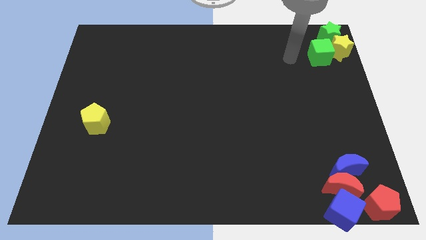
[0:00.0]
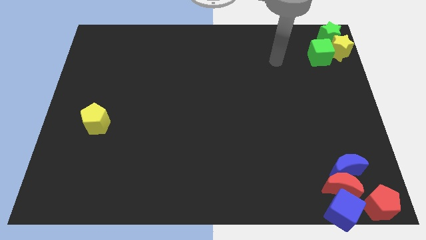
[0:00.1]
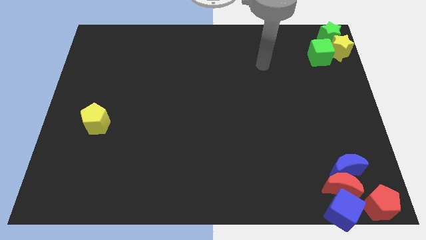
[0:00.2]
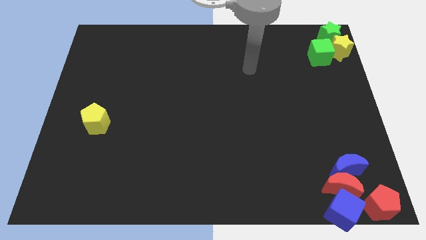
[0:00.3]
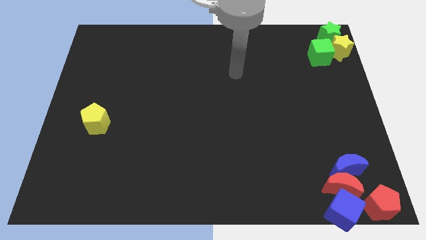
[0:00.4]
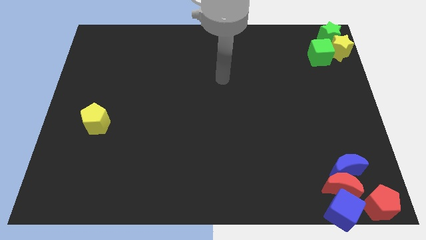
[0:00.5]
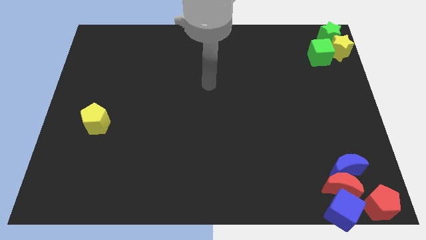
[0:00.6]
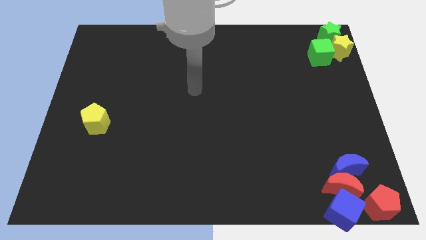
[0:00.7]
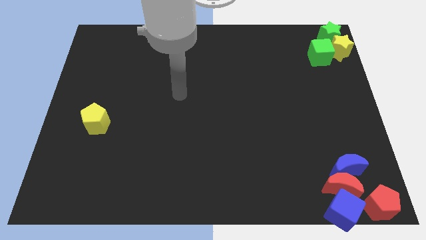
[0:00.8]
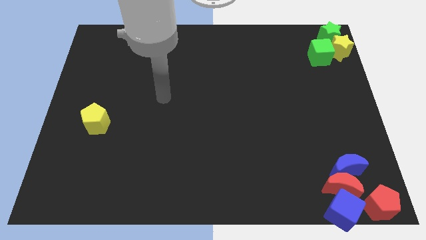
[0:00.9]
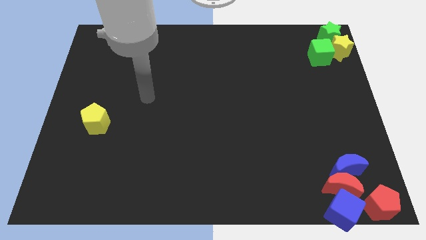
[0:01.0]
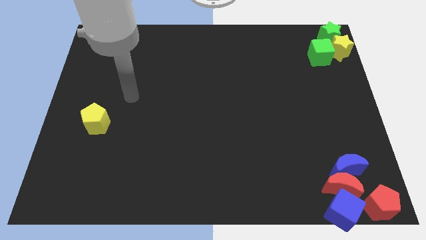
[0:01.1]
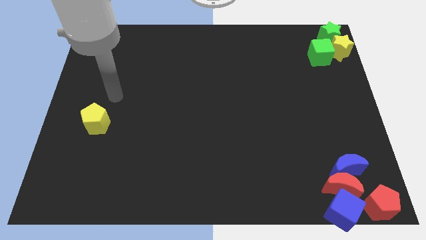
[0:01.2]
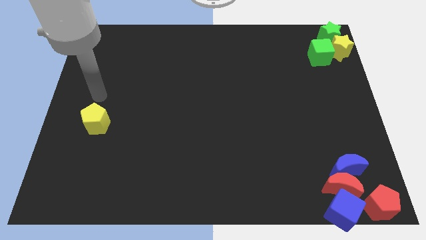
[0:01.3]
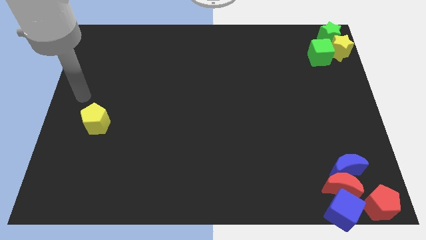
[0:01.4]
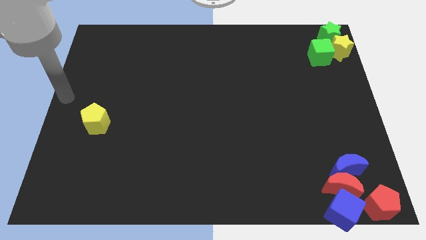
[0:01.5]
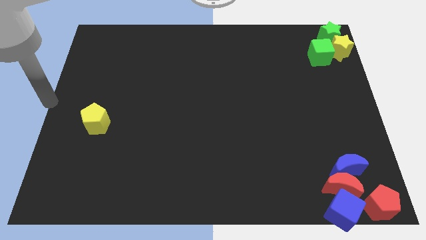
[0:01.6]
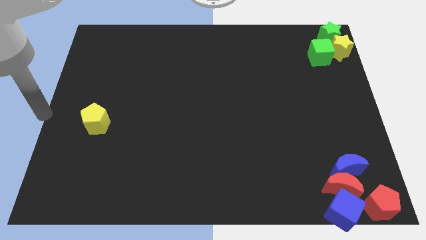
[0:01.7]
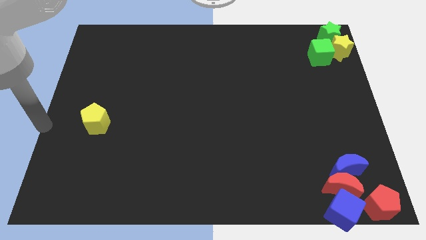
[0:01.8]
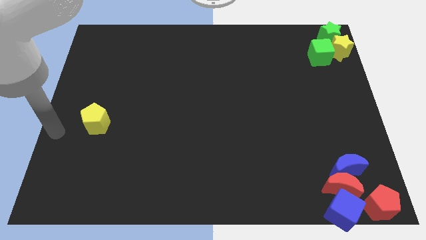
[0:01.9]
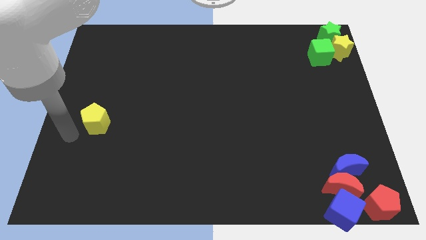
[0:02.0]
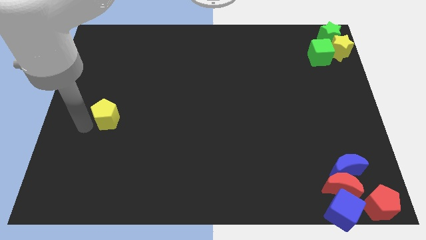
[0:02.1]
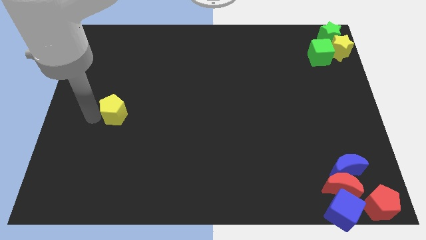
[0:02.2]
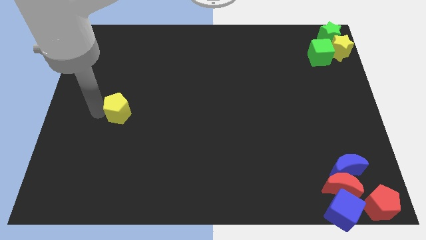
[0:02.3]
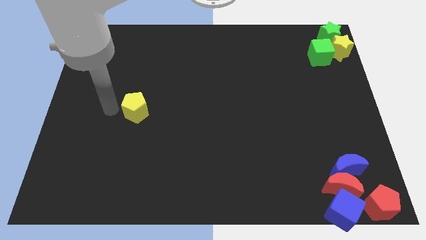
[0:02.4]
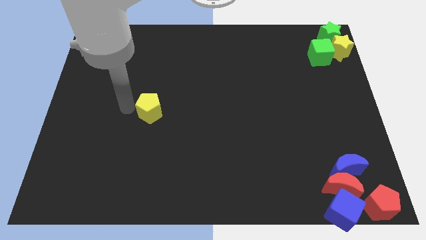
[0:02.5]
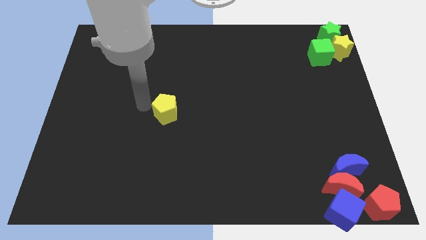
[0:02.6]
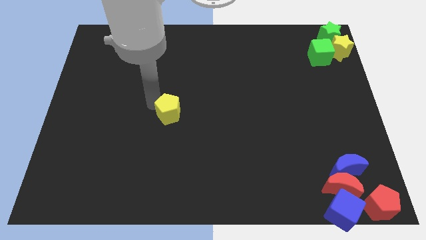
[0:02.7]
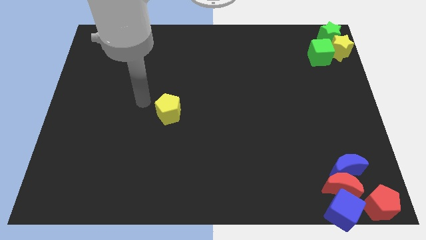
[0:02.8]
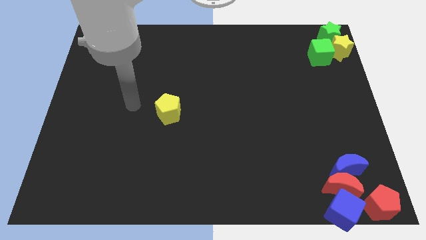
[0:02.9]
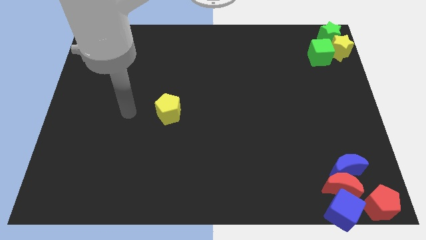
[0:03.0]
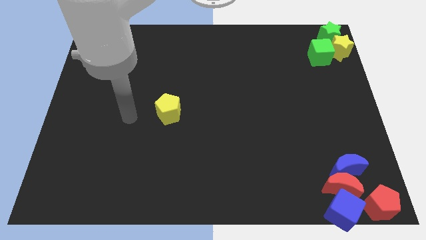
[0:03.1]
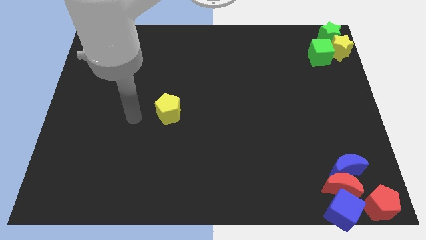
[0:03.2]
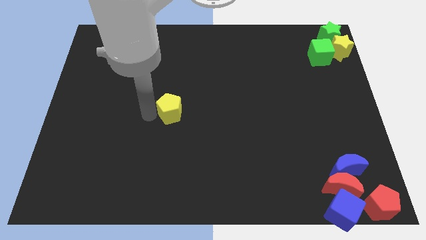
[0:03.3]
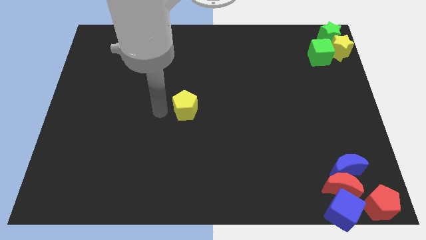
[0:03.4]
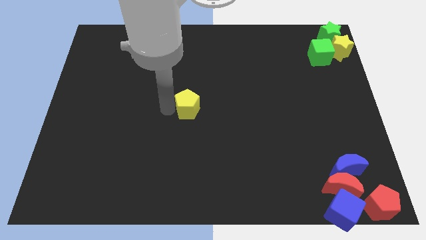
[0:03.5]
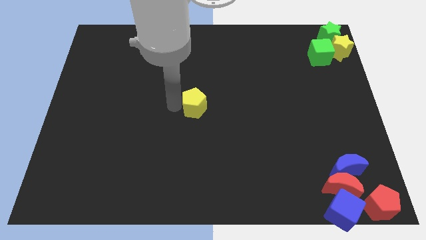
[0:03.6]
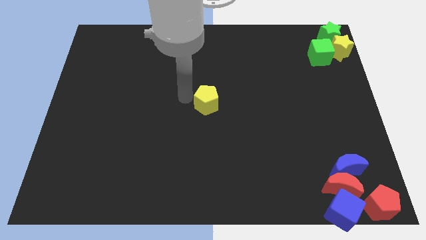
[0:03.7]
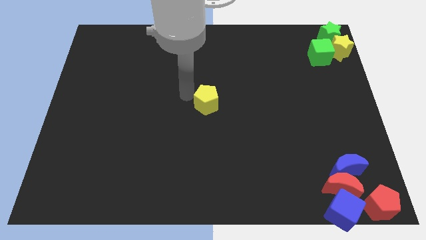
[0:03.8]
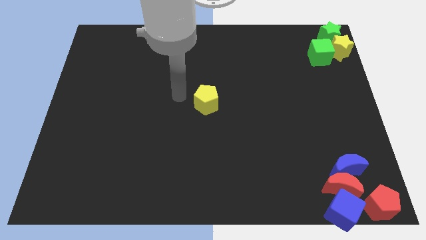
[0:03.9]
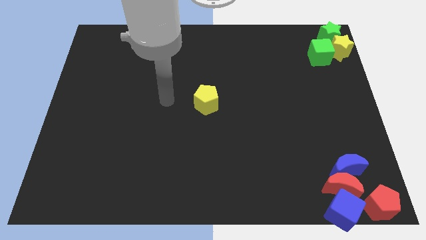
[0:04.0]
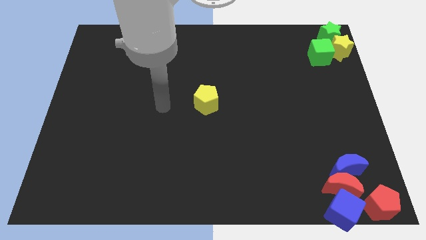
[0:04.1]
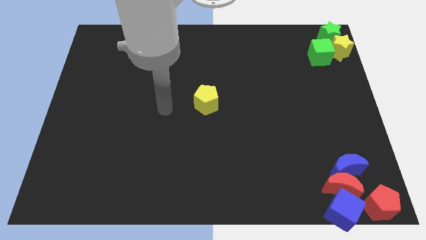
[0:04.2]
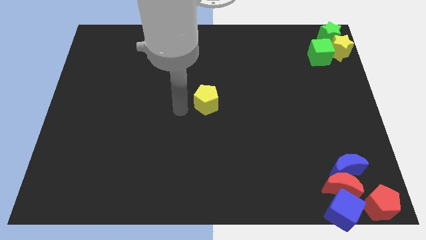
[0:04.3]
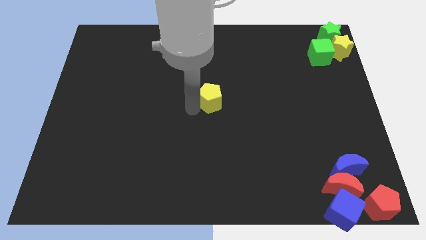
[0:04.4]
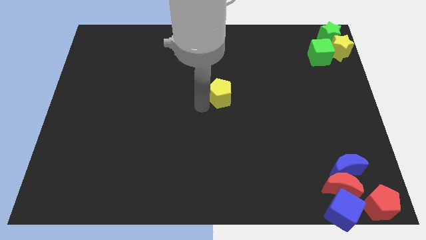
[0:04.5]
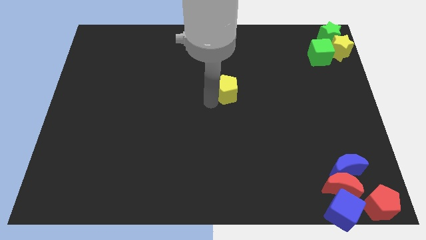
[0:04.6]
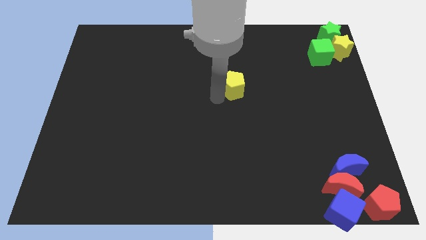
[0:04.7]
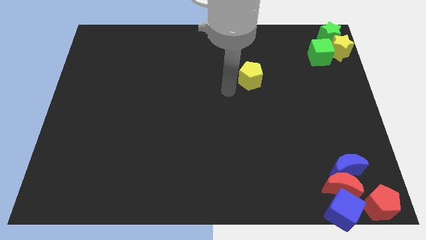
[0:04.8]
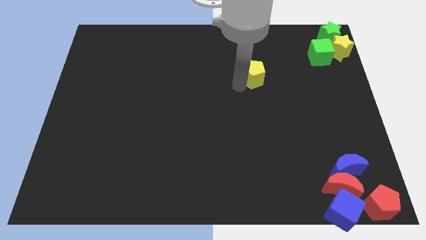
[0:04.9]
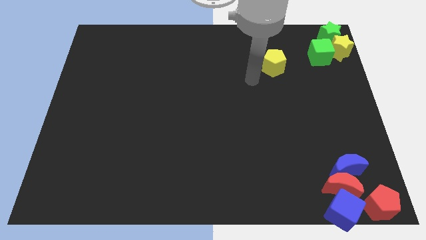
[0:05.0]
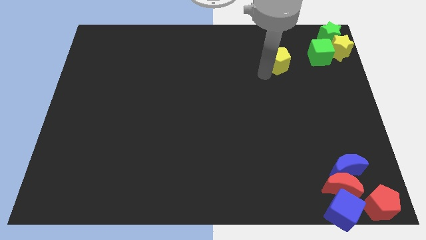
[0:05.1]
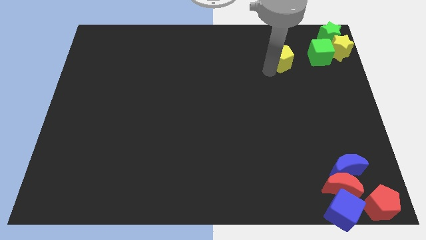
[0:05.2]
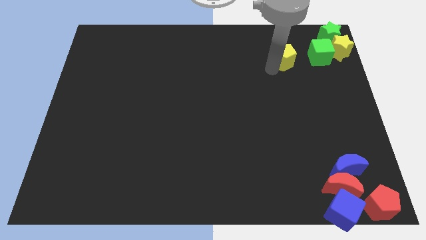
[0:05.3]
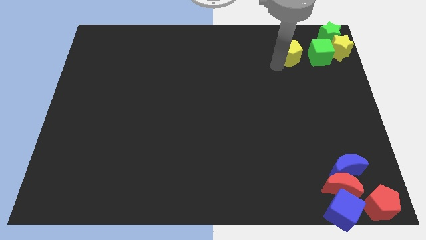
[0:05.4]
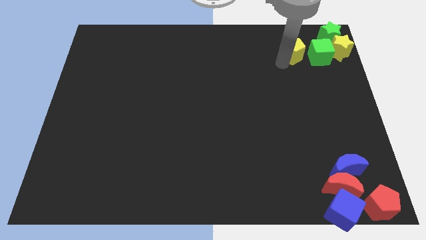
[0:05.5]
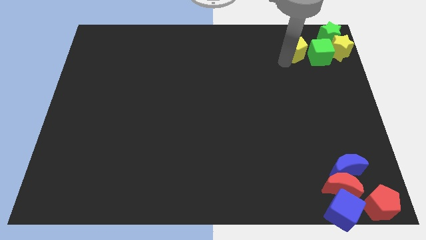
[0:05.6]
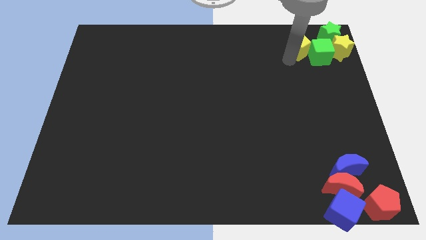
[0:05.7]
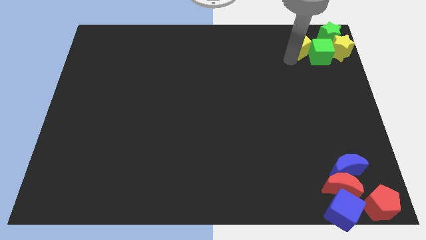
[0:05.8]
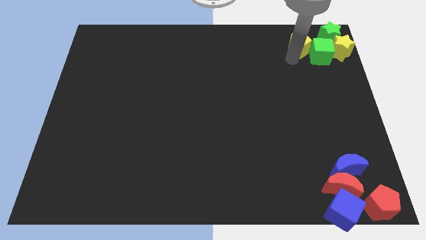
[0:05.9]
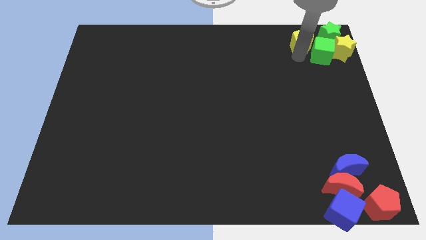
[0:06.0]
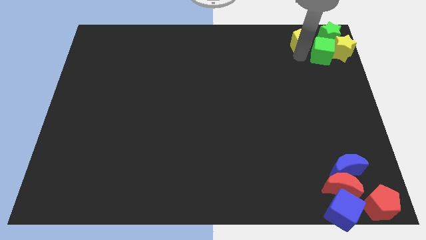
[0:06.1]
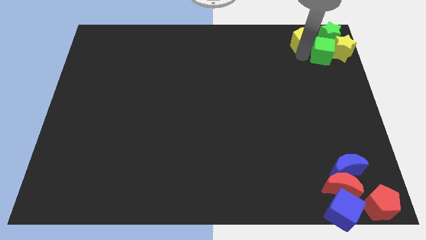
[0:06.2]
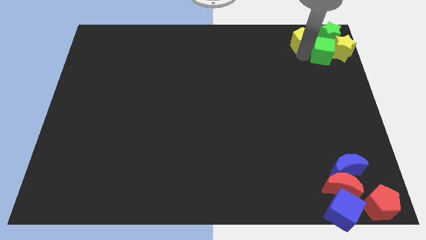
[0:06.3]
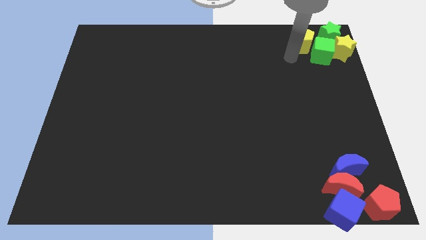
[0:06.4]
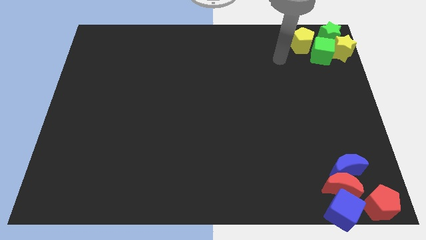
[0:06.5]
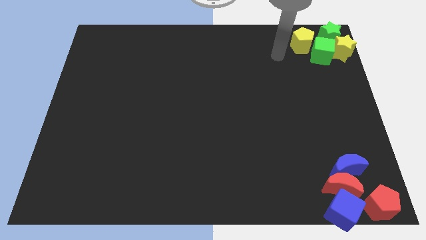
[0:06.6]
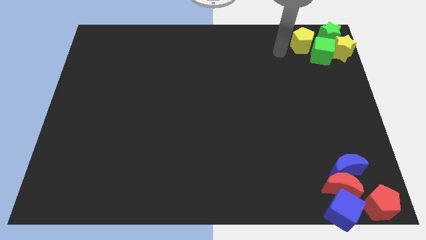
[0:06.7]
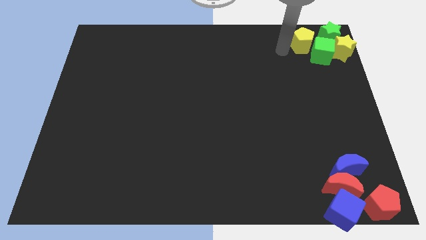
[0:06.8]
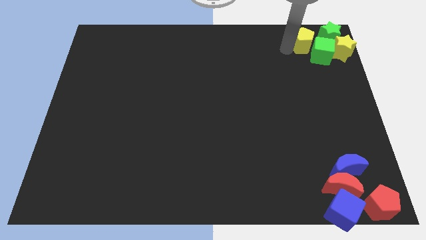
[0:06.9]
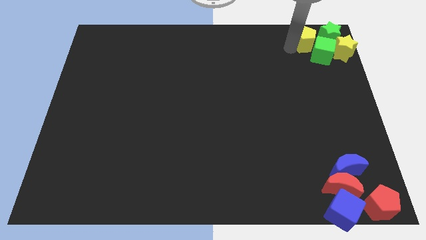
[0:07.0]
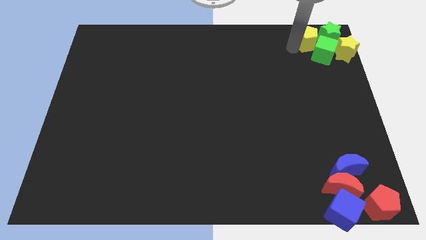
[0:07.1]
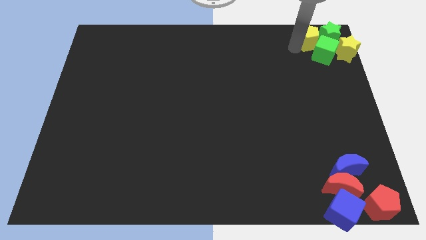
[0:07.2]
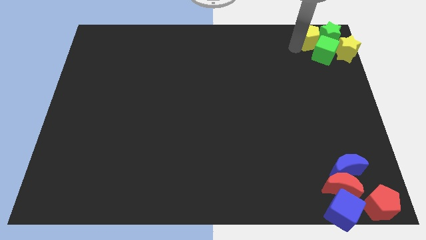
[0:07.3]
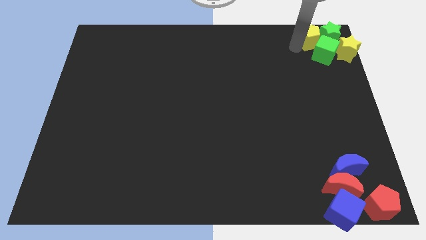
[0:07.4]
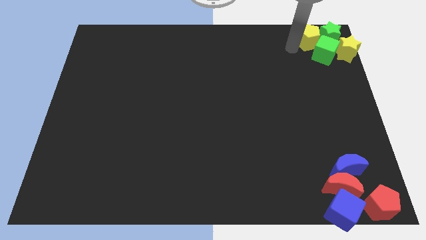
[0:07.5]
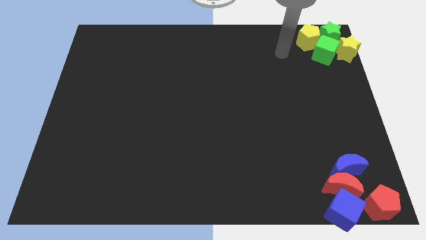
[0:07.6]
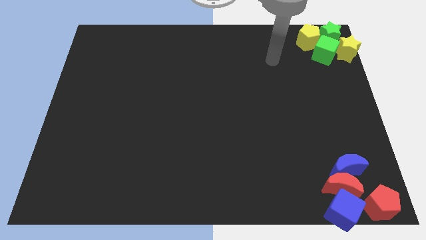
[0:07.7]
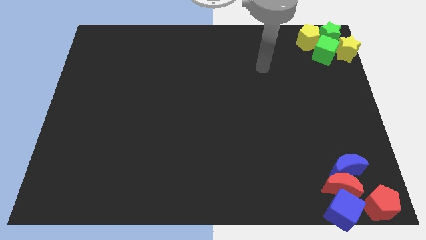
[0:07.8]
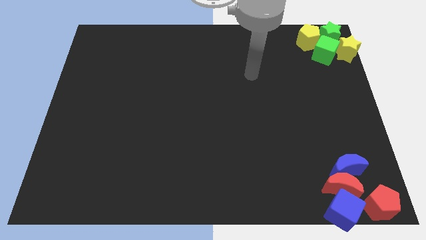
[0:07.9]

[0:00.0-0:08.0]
drag the yellow pentagon into the group of blocks at the top right of the board

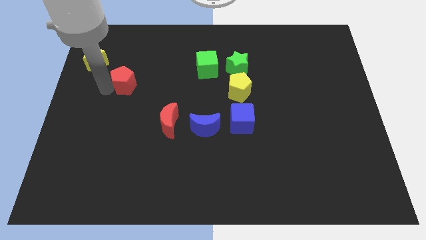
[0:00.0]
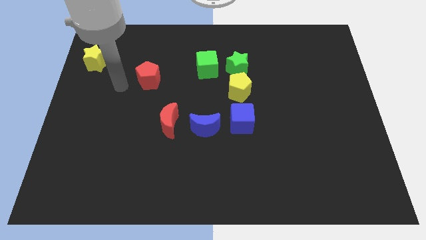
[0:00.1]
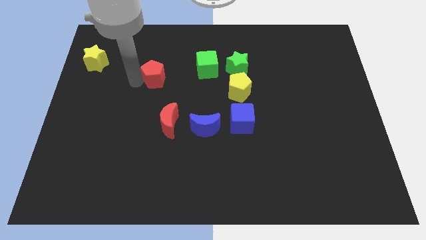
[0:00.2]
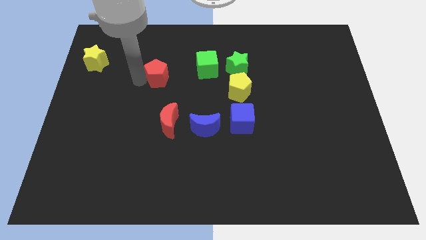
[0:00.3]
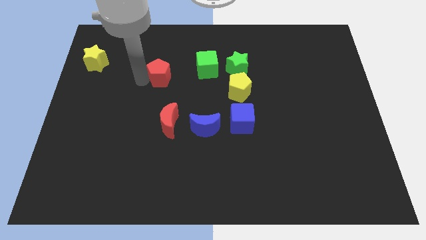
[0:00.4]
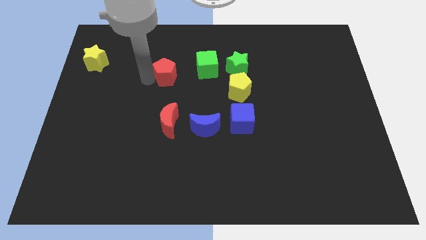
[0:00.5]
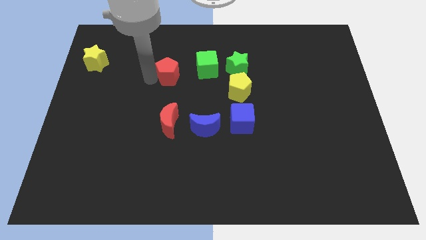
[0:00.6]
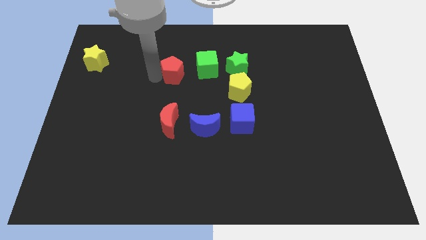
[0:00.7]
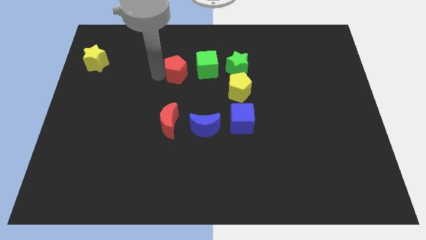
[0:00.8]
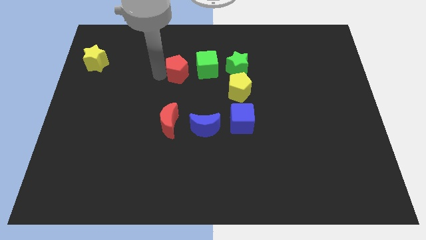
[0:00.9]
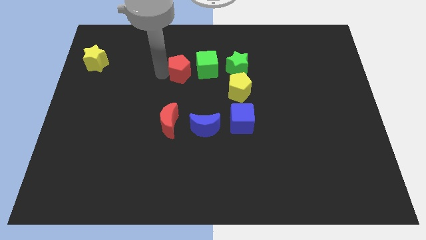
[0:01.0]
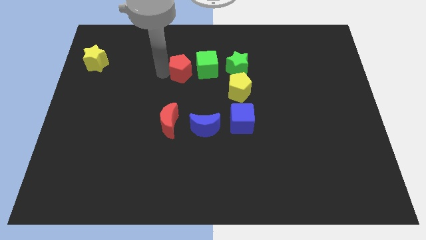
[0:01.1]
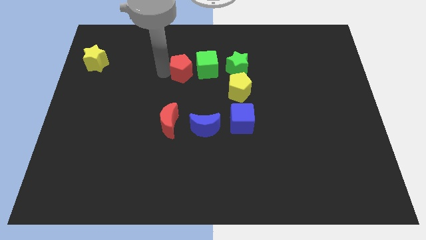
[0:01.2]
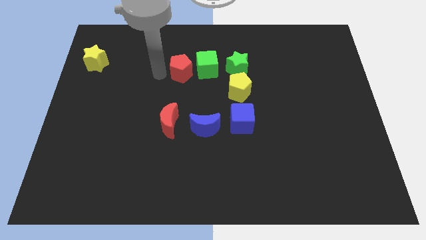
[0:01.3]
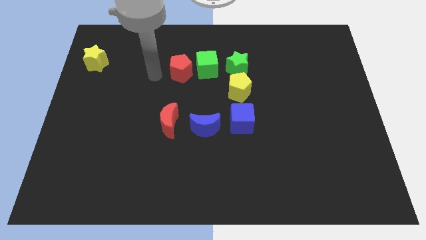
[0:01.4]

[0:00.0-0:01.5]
move the red pentagon parallel to the red crescent
